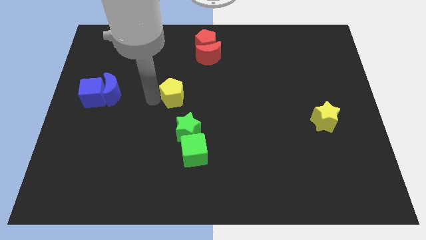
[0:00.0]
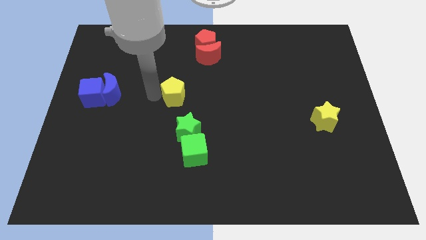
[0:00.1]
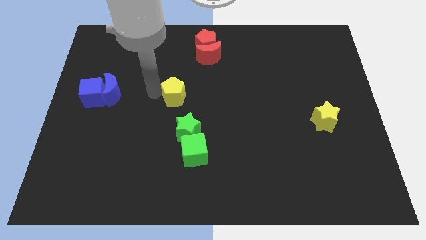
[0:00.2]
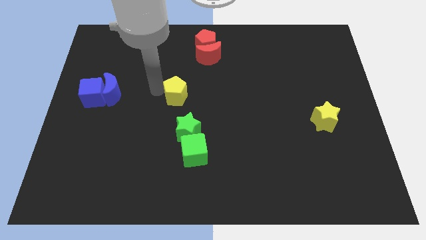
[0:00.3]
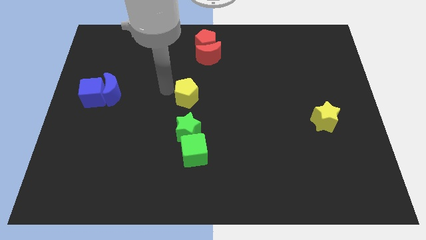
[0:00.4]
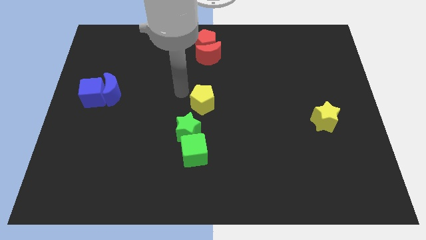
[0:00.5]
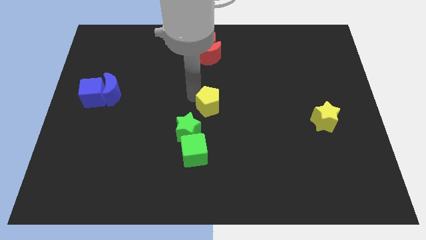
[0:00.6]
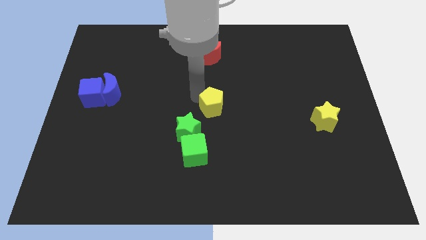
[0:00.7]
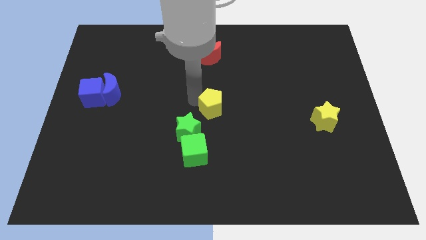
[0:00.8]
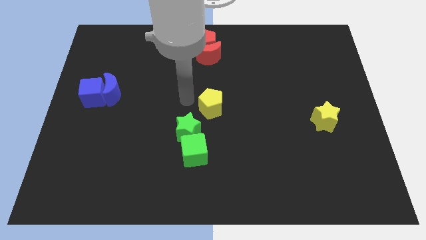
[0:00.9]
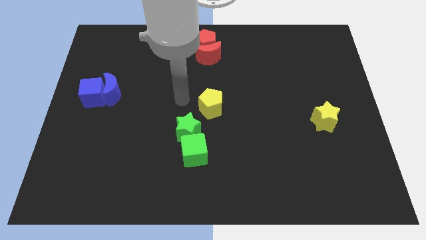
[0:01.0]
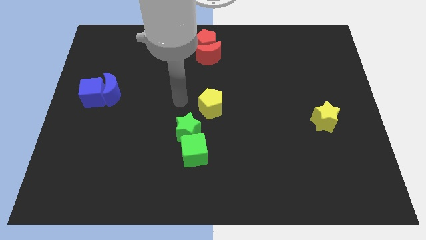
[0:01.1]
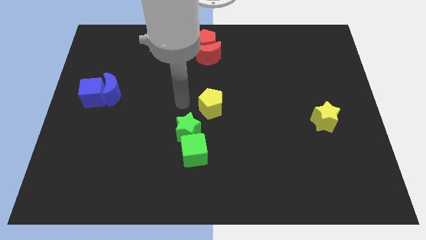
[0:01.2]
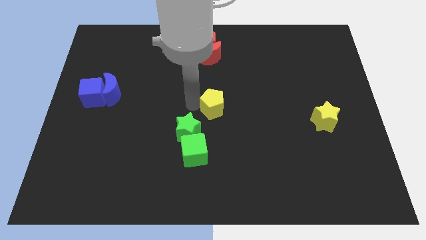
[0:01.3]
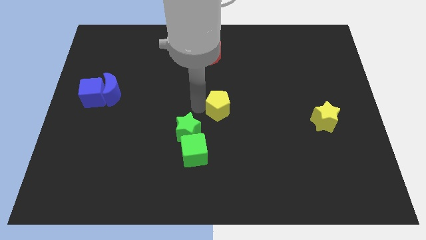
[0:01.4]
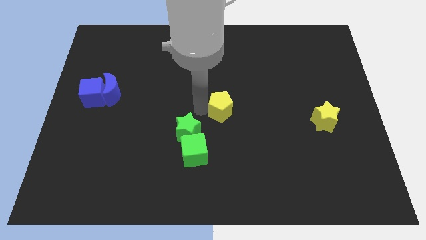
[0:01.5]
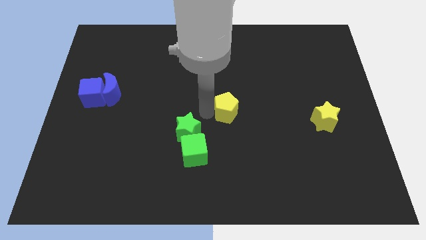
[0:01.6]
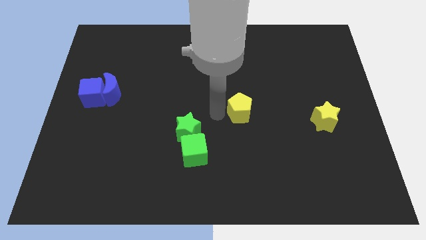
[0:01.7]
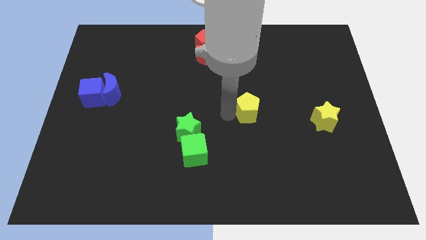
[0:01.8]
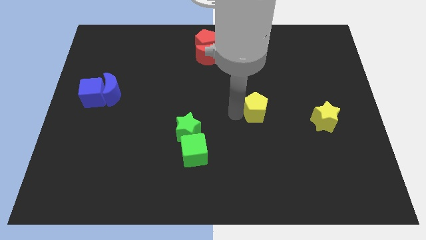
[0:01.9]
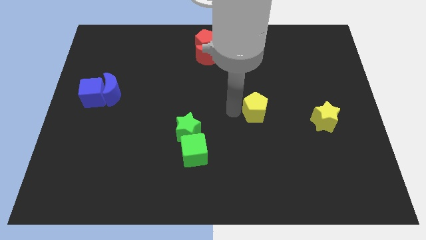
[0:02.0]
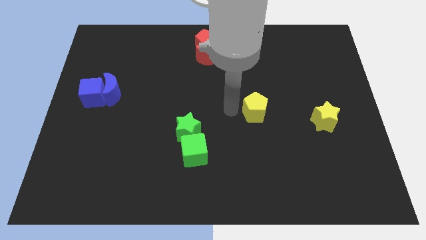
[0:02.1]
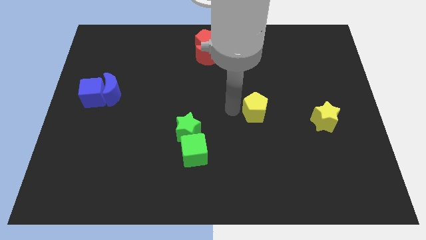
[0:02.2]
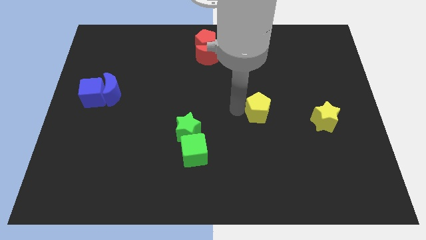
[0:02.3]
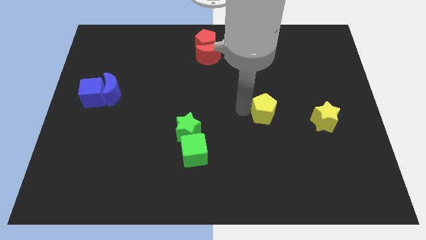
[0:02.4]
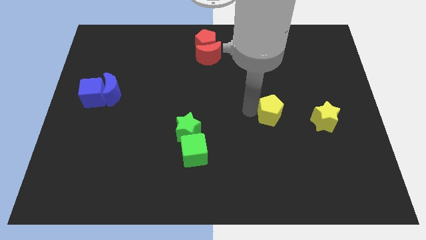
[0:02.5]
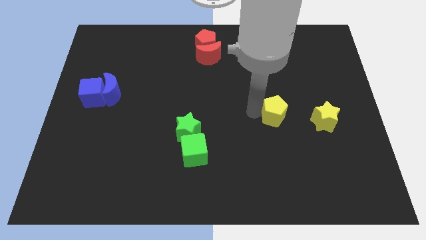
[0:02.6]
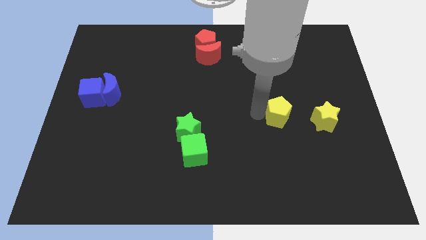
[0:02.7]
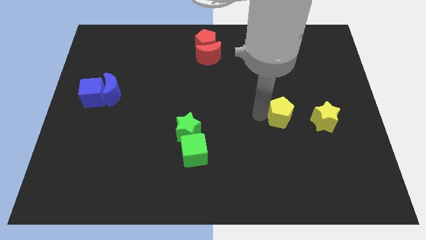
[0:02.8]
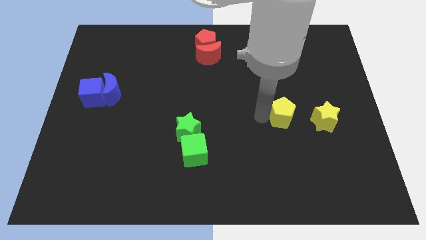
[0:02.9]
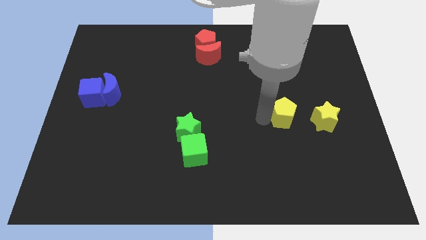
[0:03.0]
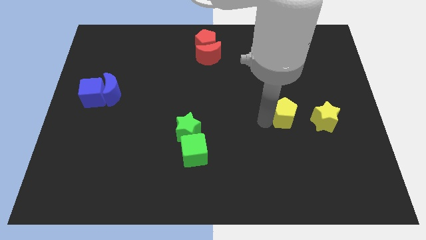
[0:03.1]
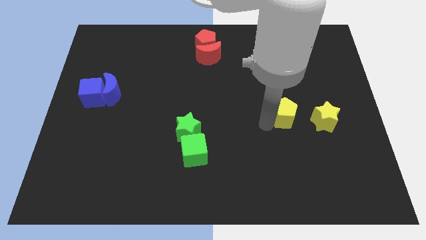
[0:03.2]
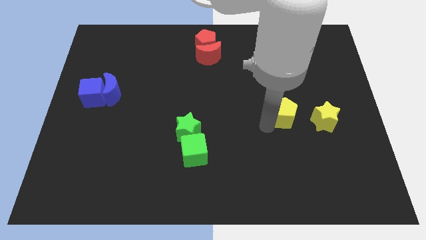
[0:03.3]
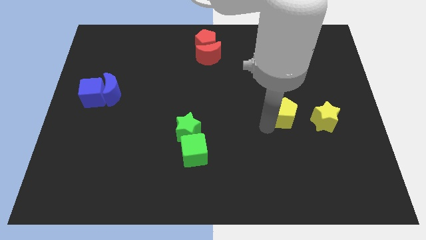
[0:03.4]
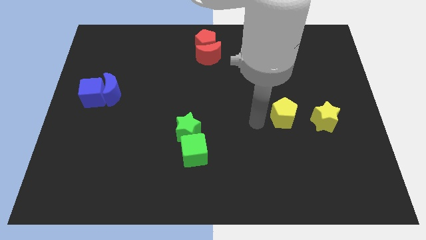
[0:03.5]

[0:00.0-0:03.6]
push the yellow pentagon to the left of the yellow star

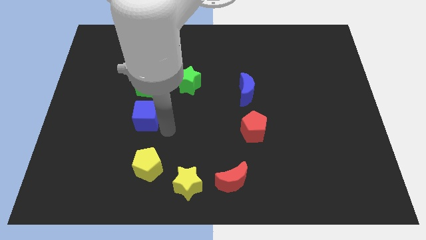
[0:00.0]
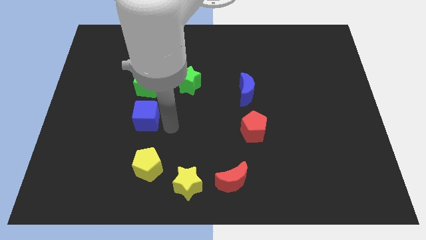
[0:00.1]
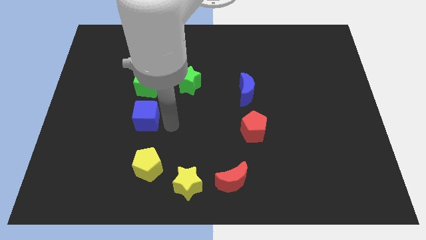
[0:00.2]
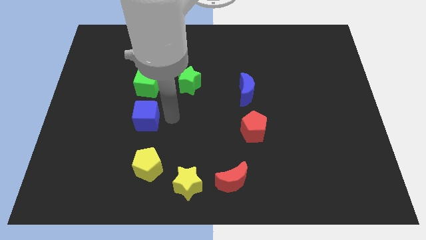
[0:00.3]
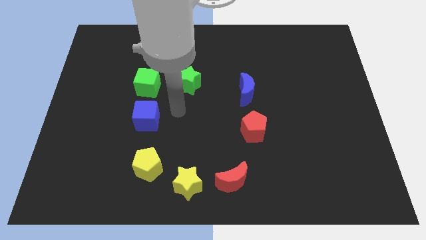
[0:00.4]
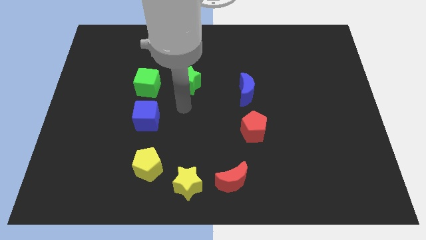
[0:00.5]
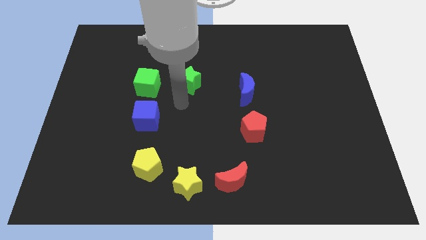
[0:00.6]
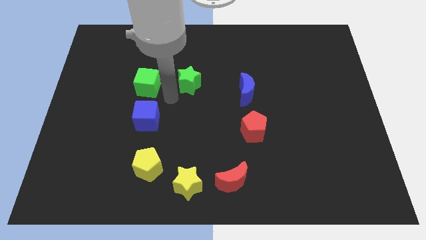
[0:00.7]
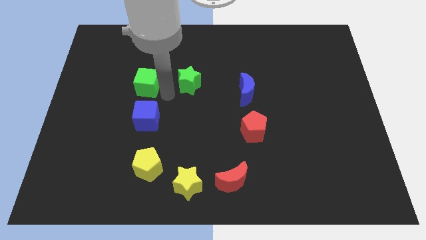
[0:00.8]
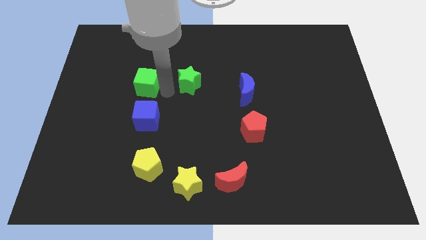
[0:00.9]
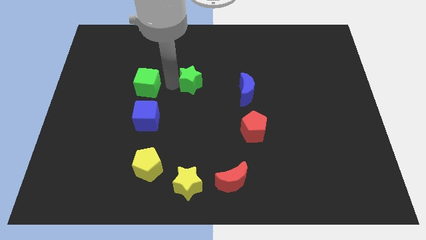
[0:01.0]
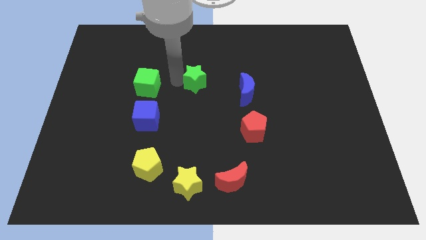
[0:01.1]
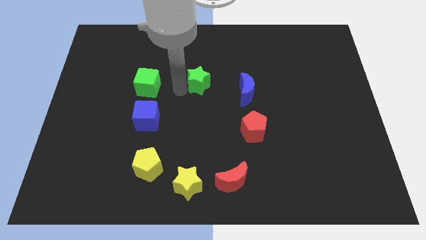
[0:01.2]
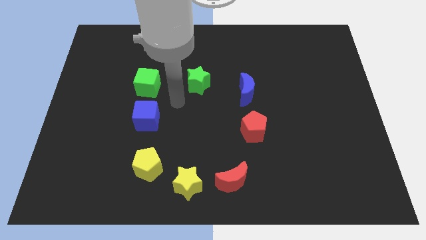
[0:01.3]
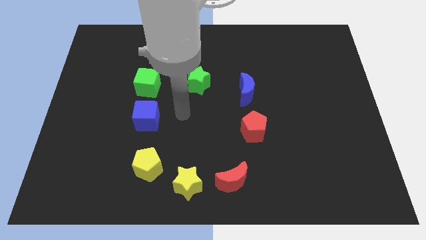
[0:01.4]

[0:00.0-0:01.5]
slightly move the green star to the center

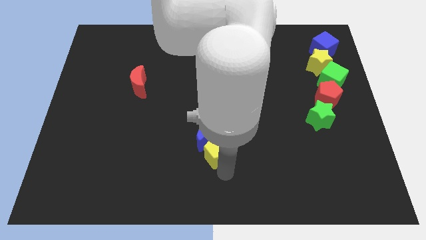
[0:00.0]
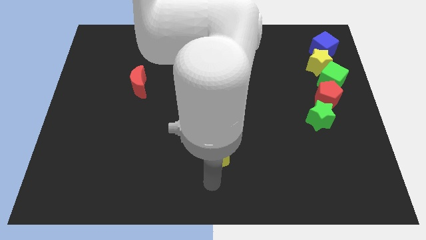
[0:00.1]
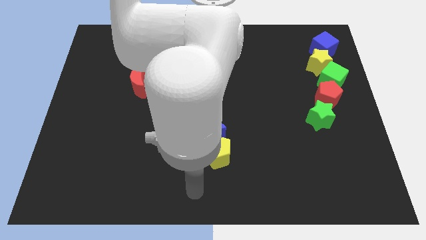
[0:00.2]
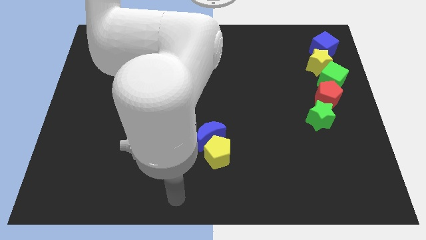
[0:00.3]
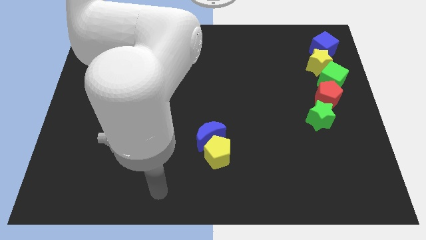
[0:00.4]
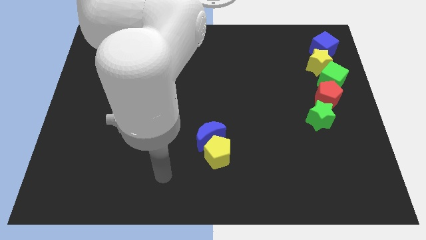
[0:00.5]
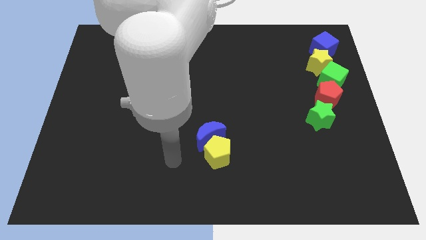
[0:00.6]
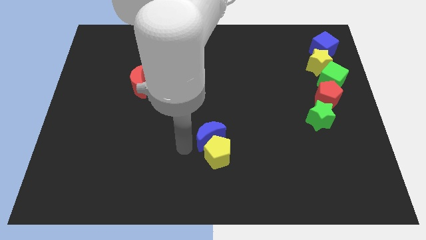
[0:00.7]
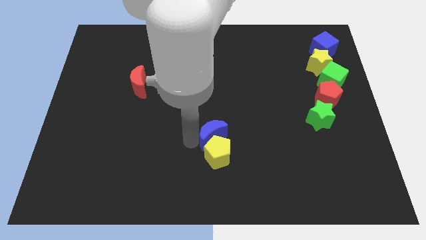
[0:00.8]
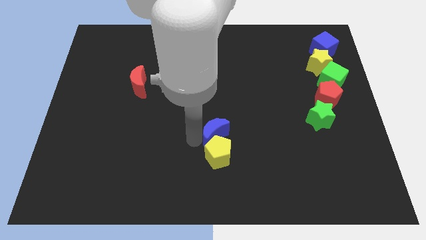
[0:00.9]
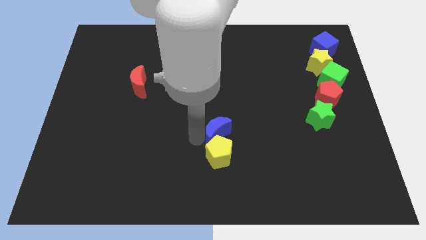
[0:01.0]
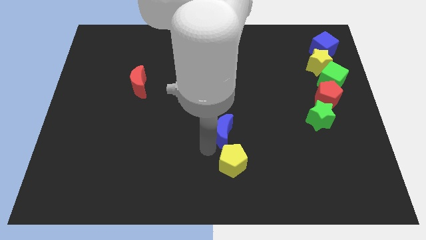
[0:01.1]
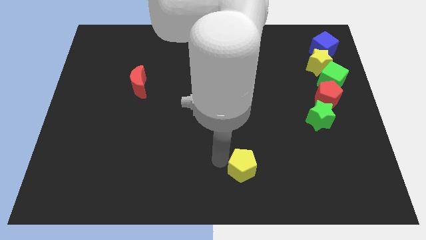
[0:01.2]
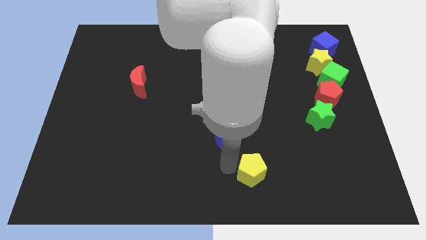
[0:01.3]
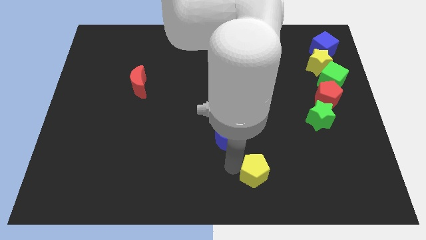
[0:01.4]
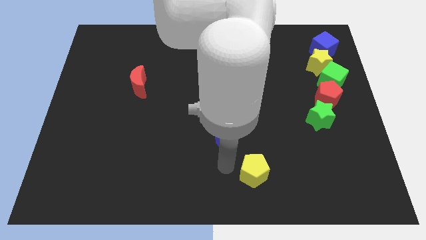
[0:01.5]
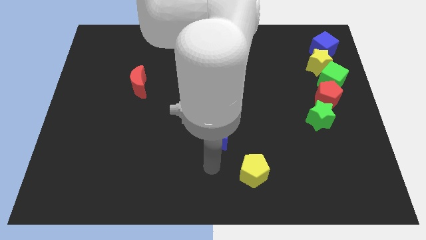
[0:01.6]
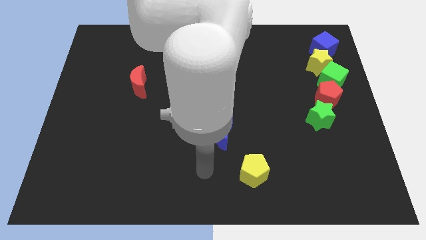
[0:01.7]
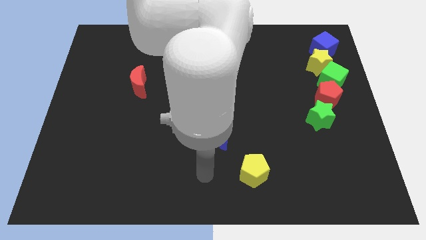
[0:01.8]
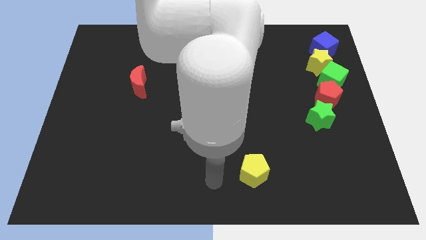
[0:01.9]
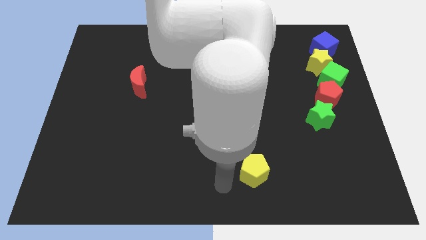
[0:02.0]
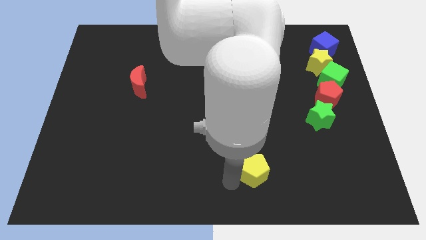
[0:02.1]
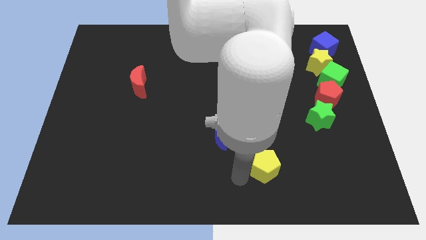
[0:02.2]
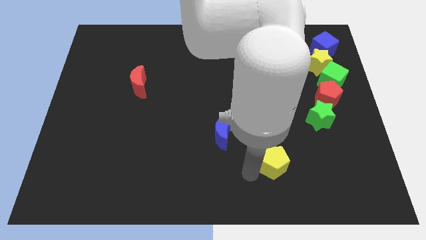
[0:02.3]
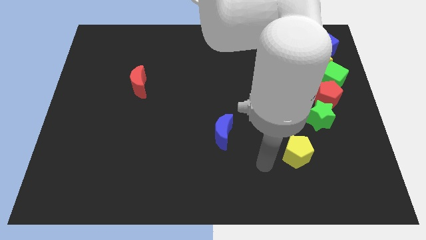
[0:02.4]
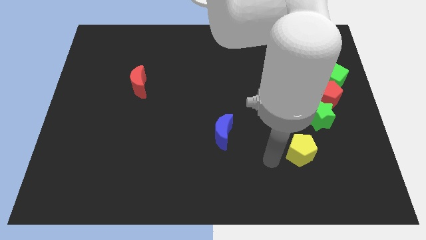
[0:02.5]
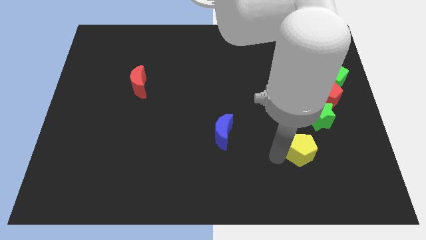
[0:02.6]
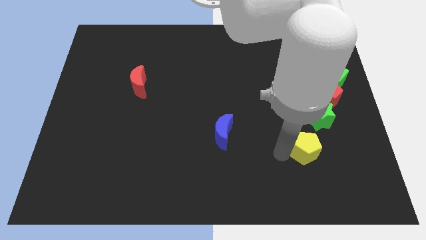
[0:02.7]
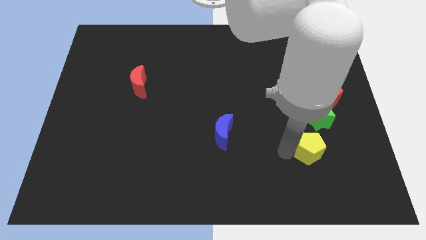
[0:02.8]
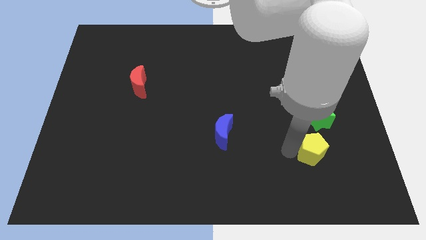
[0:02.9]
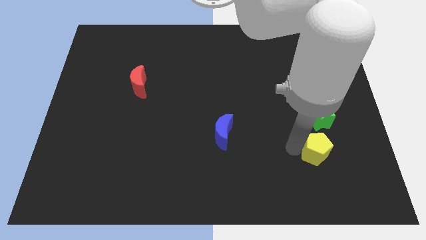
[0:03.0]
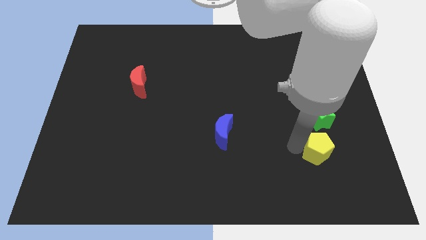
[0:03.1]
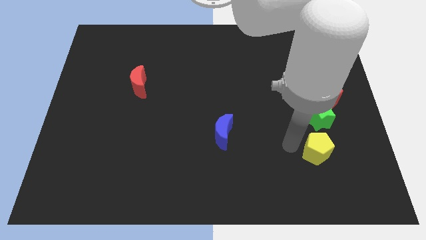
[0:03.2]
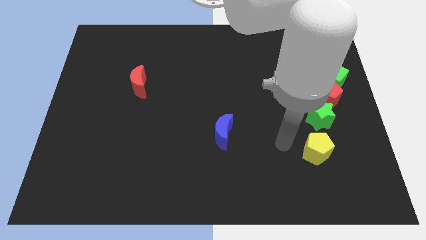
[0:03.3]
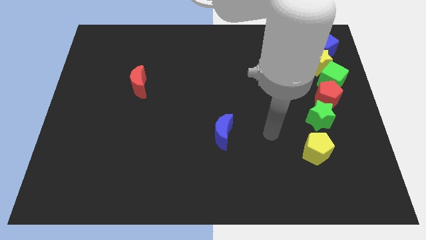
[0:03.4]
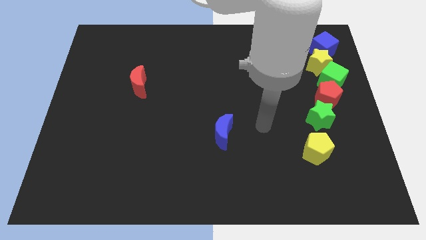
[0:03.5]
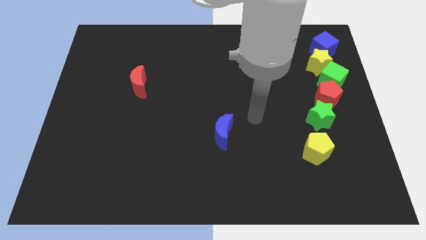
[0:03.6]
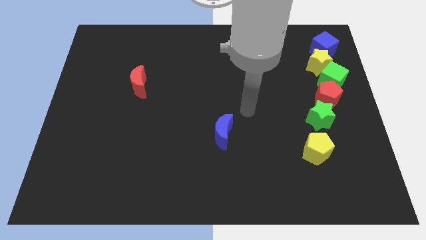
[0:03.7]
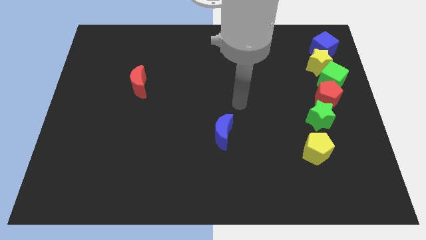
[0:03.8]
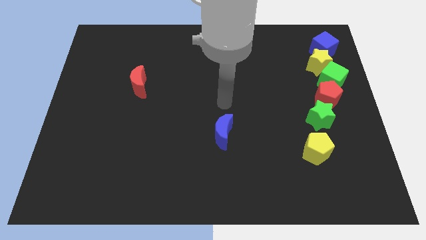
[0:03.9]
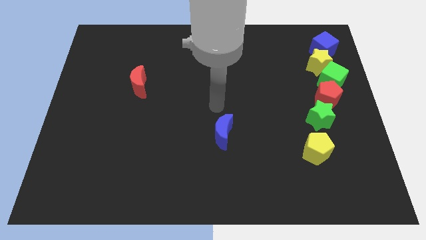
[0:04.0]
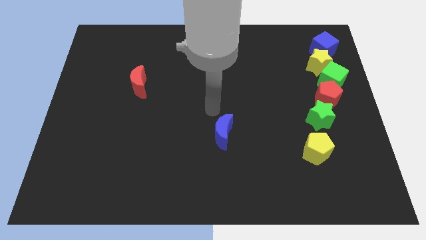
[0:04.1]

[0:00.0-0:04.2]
separate yellow pentagon from the blue moon
